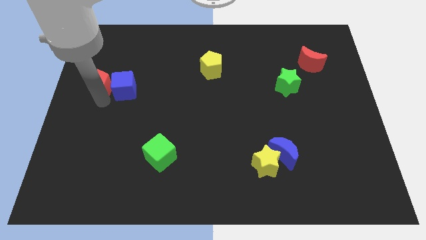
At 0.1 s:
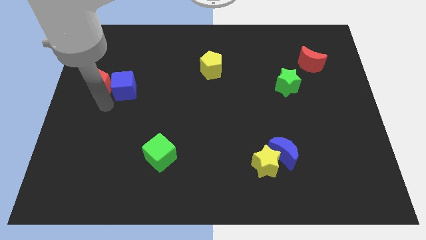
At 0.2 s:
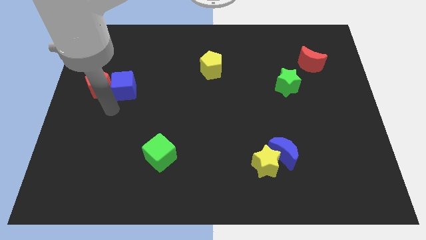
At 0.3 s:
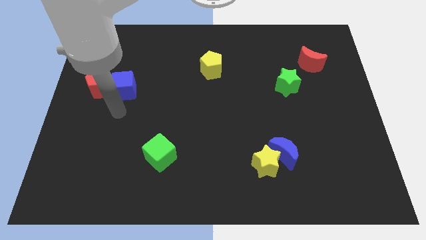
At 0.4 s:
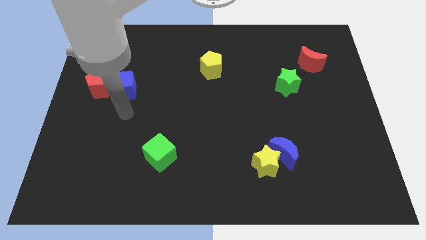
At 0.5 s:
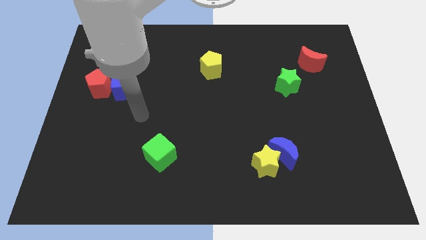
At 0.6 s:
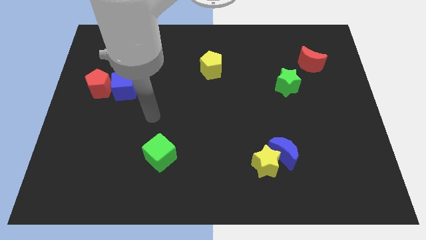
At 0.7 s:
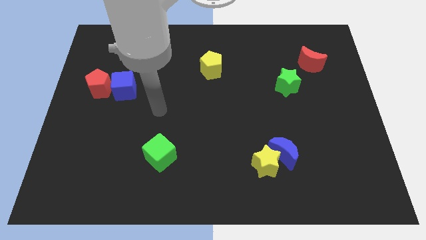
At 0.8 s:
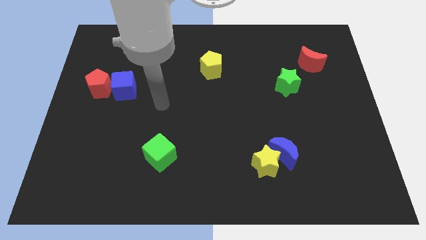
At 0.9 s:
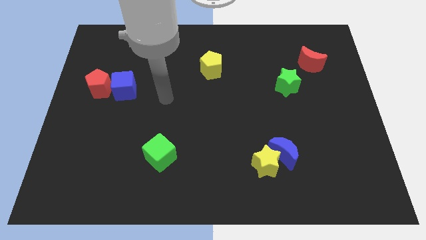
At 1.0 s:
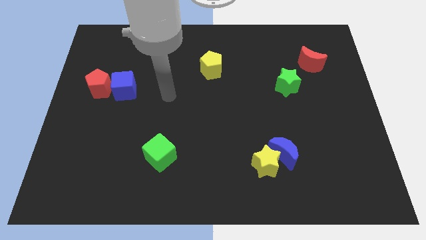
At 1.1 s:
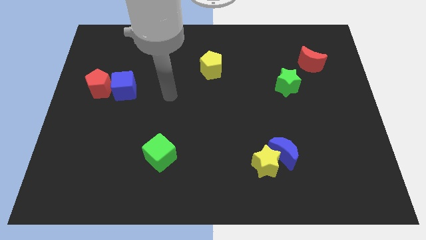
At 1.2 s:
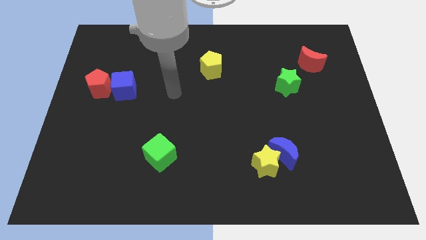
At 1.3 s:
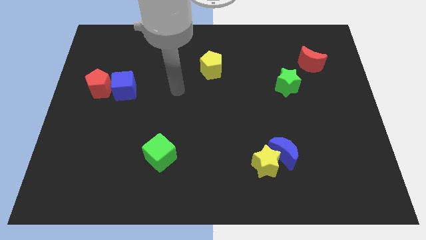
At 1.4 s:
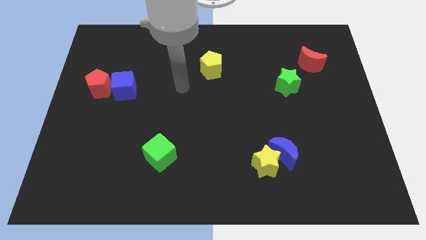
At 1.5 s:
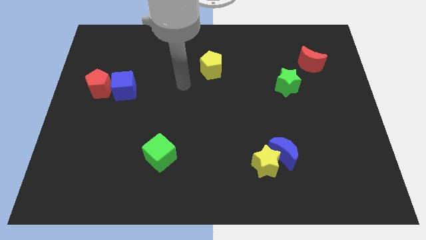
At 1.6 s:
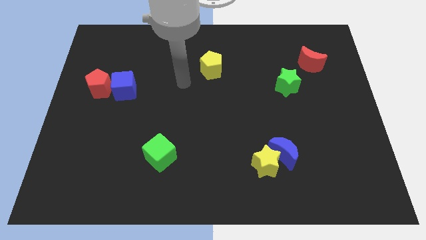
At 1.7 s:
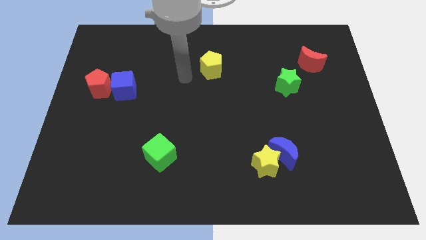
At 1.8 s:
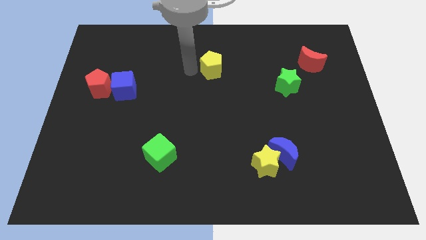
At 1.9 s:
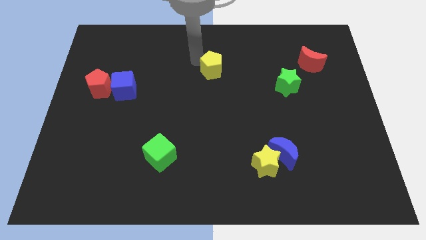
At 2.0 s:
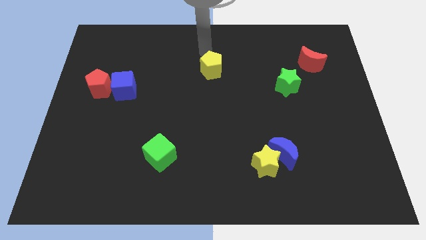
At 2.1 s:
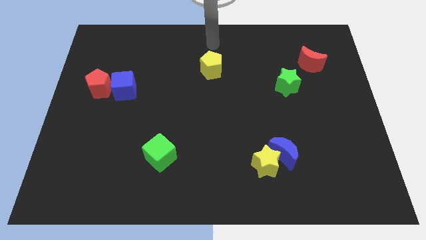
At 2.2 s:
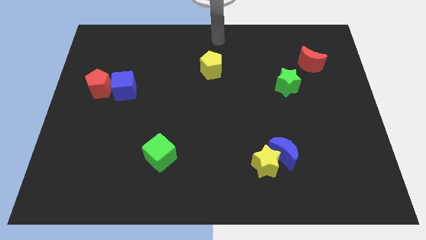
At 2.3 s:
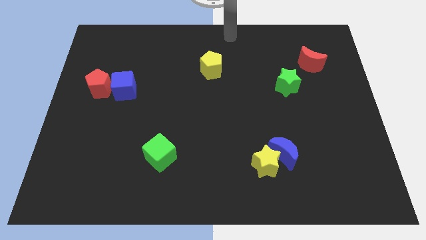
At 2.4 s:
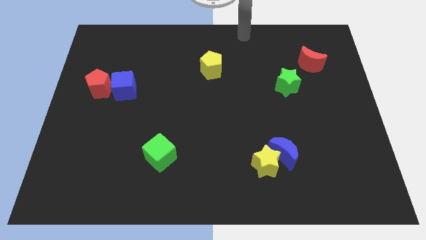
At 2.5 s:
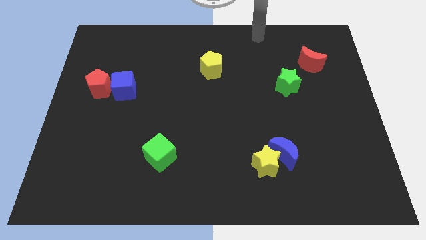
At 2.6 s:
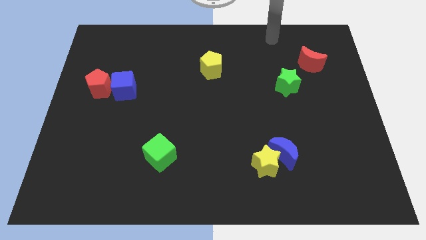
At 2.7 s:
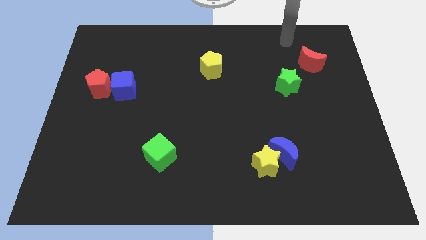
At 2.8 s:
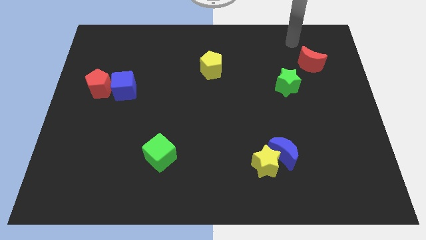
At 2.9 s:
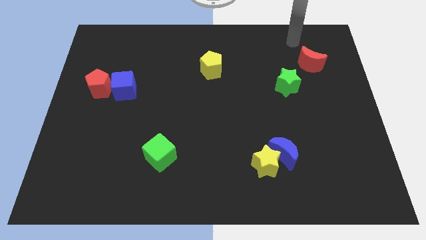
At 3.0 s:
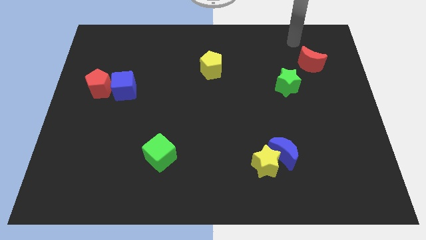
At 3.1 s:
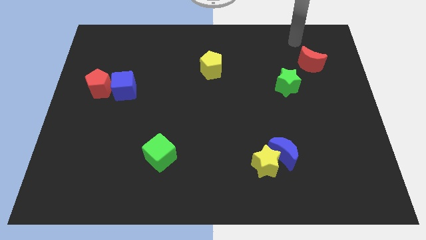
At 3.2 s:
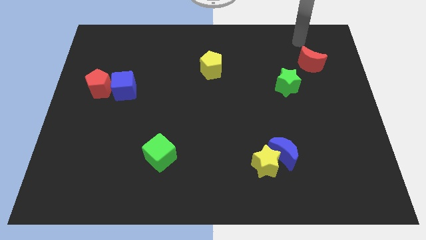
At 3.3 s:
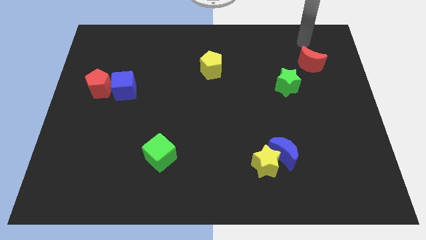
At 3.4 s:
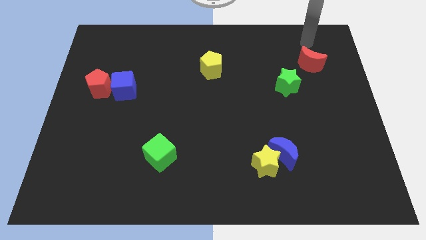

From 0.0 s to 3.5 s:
point your arm to the top of the red crescent

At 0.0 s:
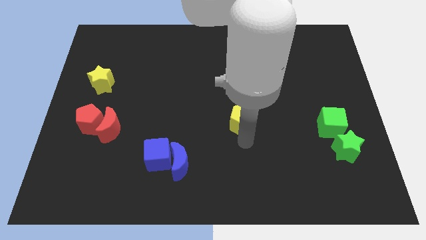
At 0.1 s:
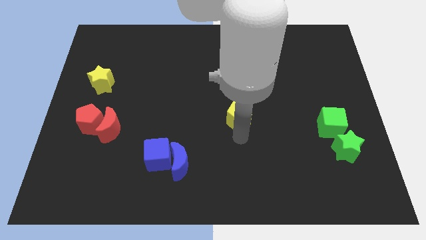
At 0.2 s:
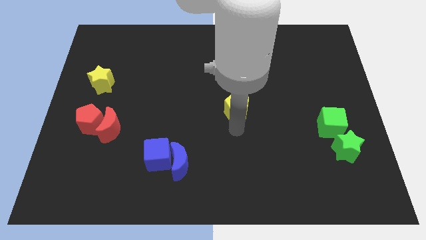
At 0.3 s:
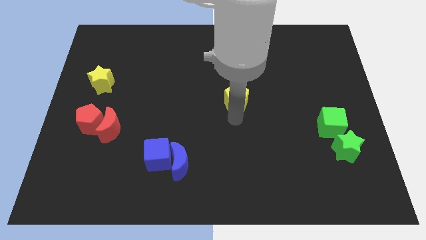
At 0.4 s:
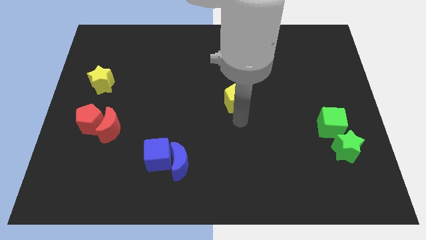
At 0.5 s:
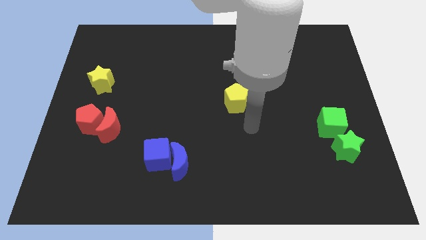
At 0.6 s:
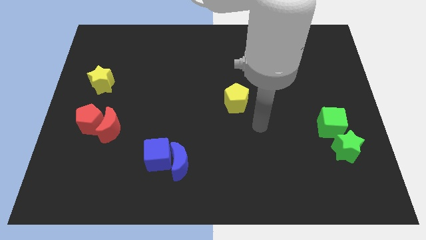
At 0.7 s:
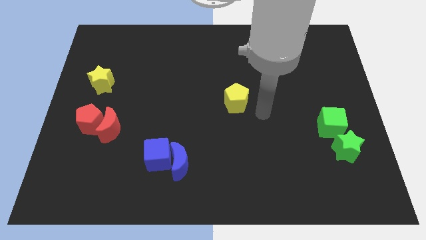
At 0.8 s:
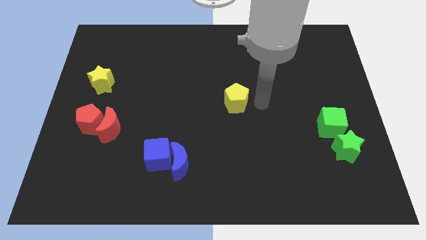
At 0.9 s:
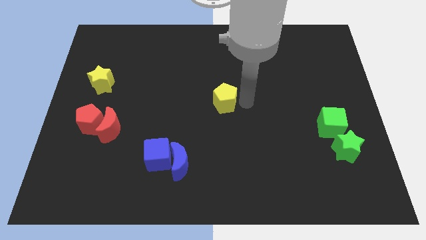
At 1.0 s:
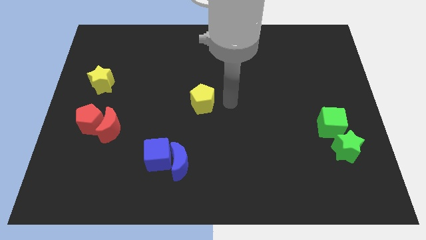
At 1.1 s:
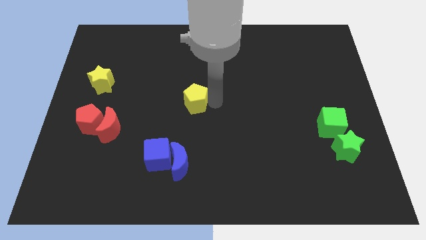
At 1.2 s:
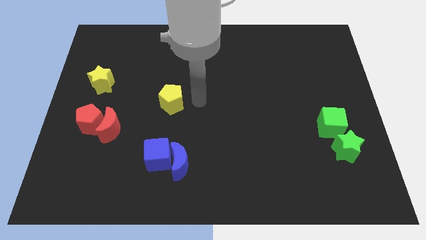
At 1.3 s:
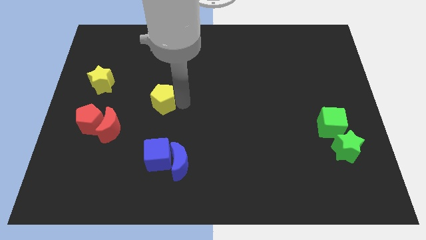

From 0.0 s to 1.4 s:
move yellow pentagon left diagonally towards yellow star

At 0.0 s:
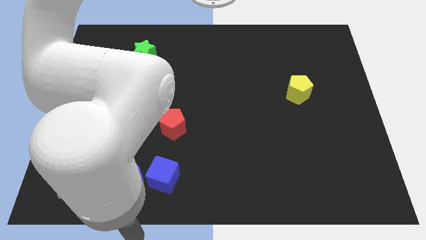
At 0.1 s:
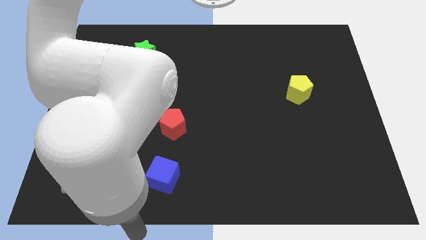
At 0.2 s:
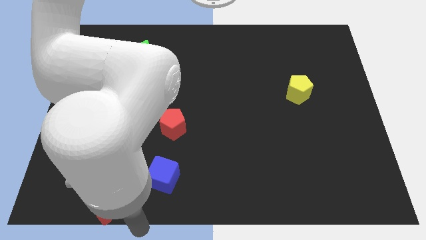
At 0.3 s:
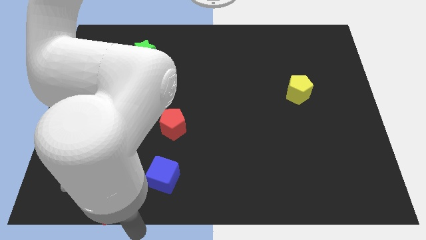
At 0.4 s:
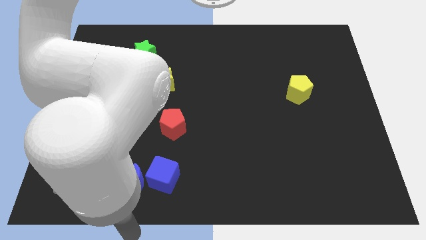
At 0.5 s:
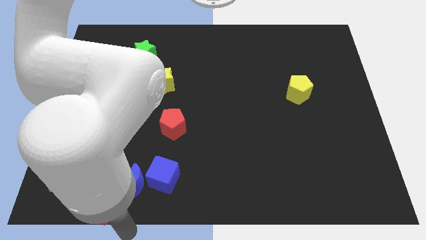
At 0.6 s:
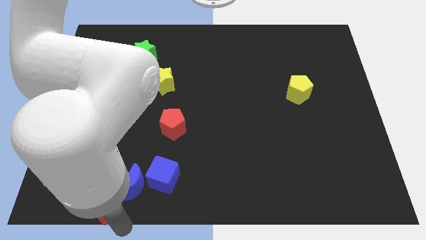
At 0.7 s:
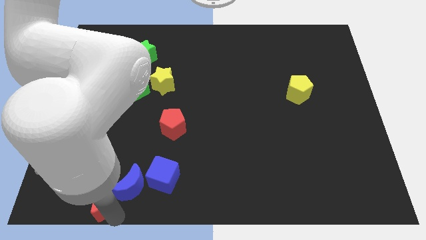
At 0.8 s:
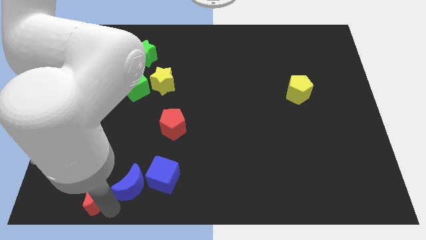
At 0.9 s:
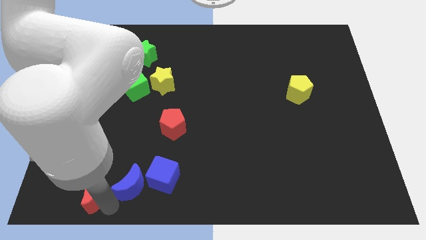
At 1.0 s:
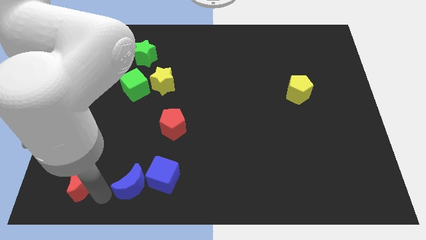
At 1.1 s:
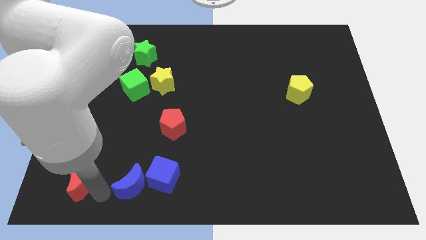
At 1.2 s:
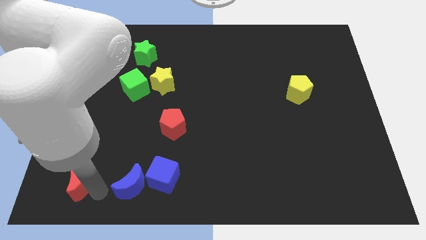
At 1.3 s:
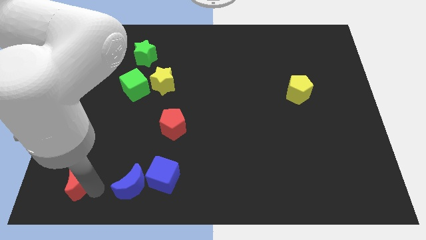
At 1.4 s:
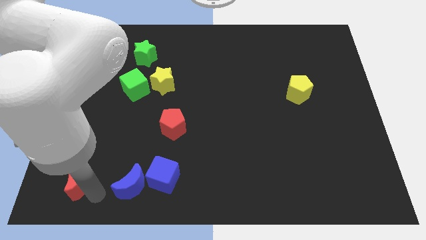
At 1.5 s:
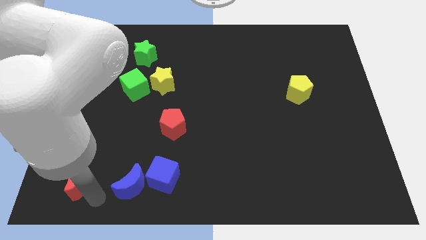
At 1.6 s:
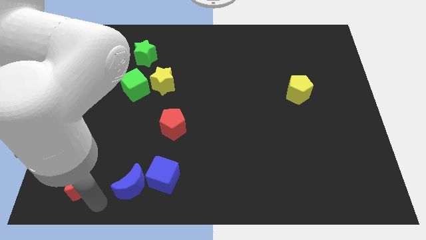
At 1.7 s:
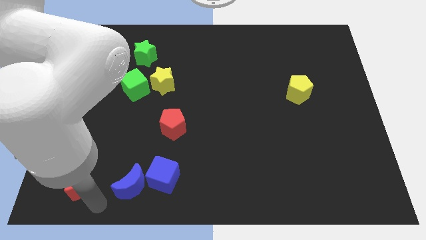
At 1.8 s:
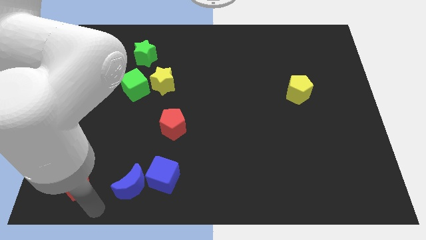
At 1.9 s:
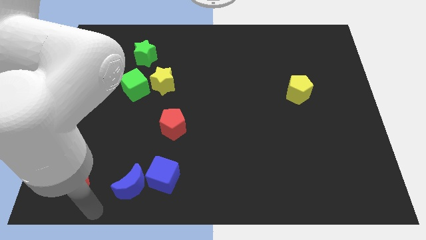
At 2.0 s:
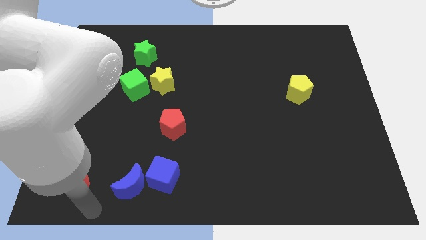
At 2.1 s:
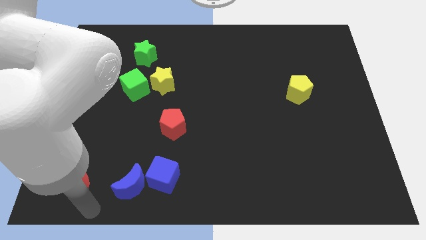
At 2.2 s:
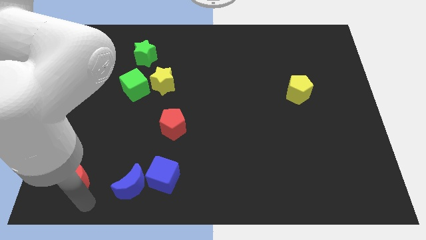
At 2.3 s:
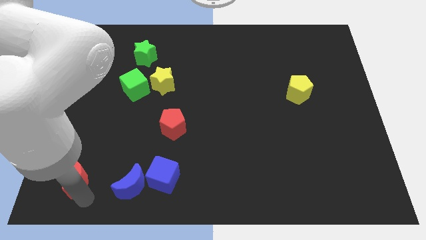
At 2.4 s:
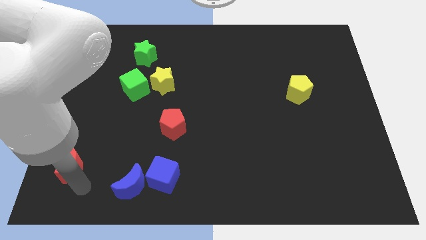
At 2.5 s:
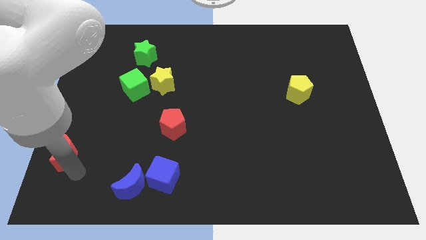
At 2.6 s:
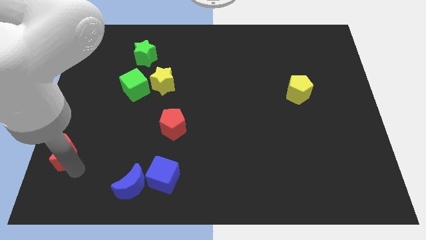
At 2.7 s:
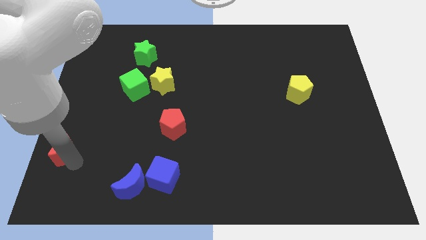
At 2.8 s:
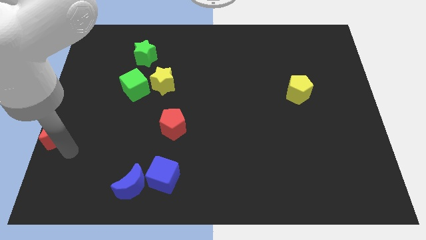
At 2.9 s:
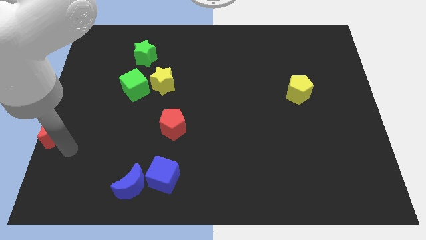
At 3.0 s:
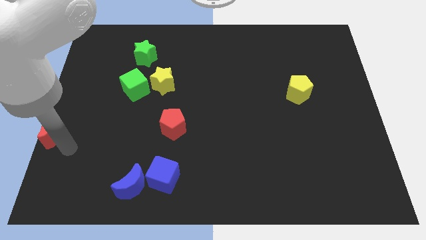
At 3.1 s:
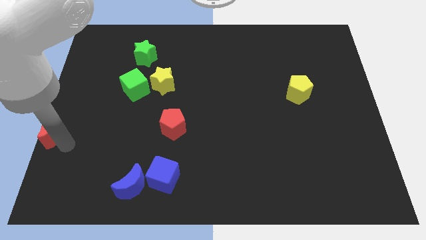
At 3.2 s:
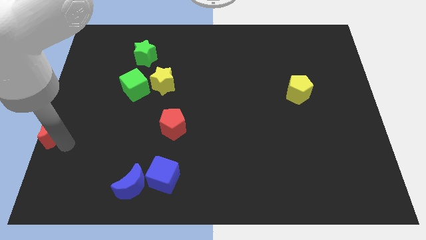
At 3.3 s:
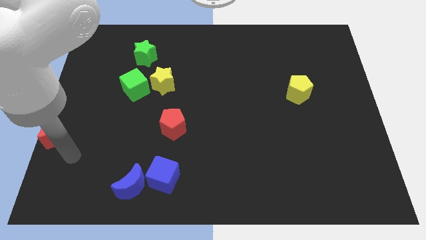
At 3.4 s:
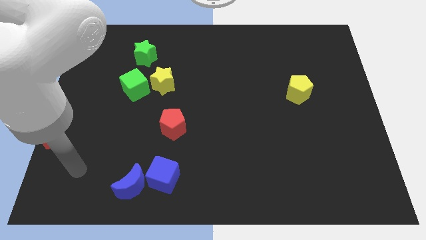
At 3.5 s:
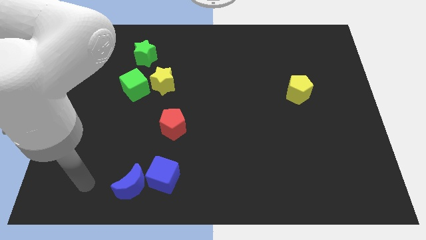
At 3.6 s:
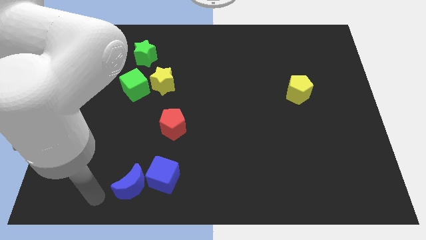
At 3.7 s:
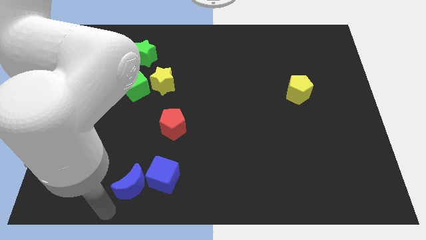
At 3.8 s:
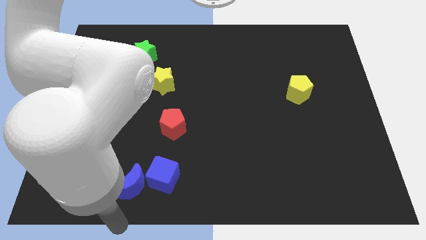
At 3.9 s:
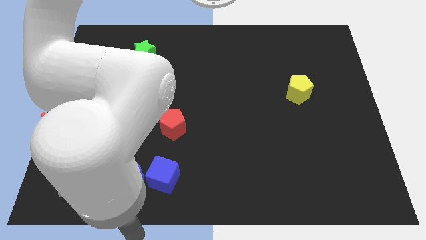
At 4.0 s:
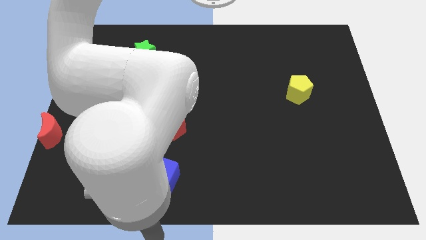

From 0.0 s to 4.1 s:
push the red moon to the left center of the board
